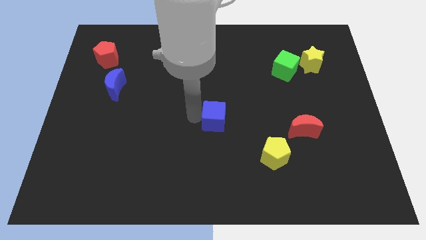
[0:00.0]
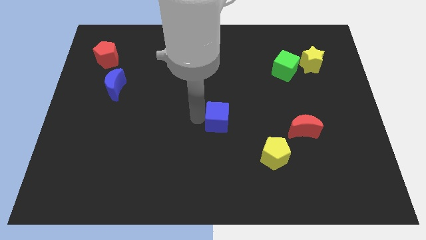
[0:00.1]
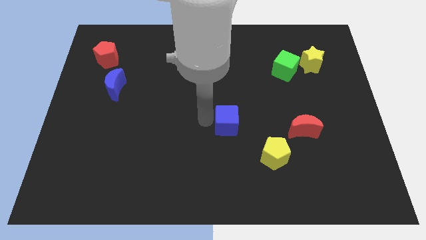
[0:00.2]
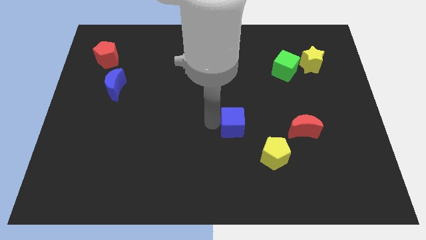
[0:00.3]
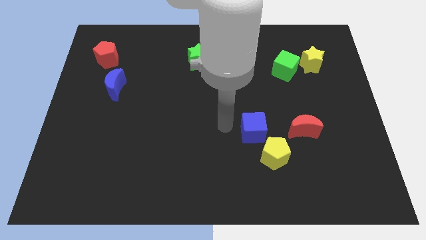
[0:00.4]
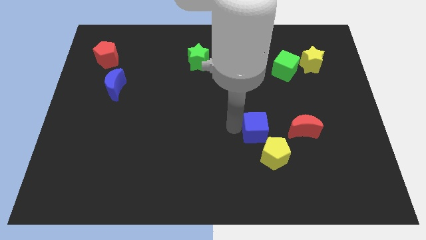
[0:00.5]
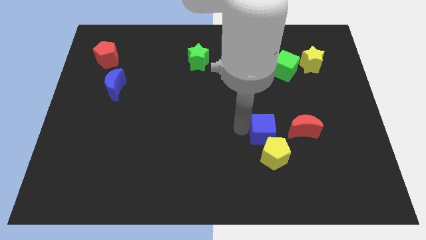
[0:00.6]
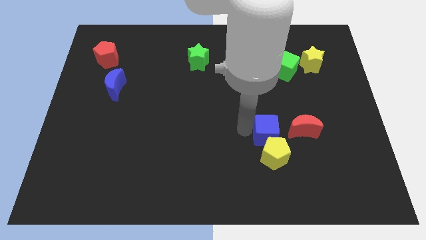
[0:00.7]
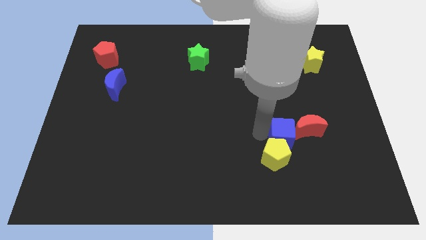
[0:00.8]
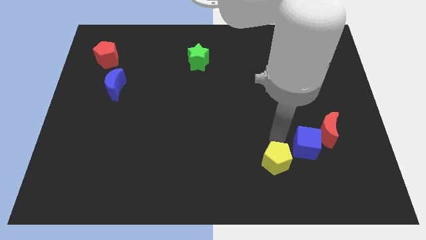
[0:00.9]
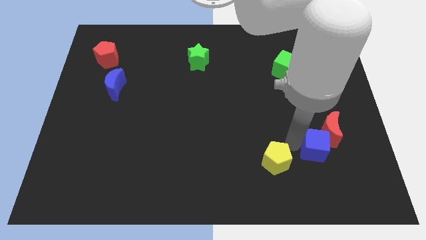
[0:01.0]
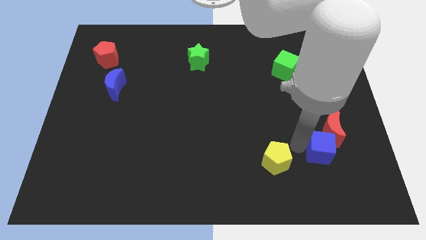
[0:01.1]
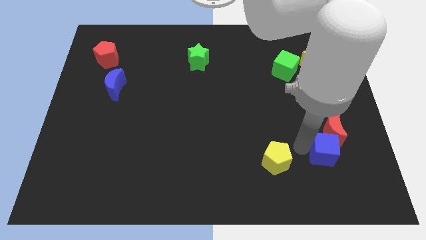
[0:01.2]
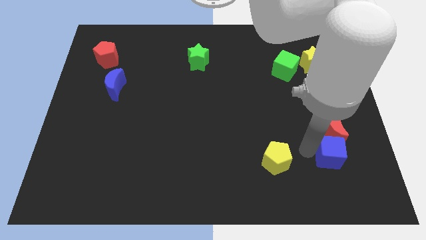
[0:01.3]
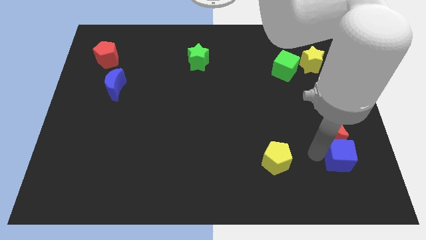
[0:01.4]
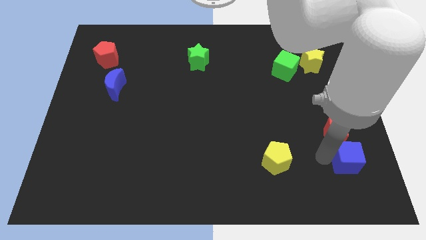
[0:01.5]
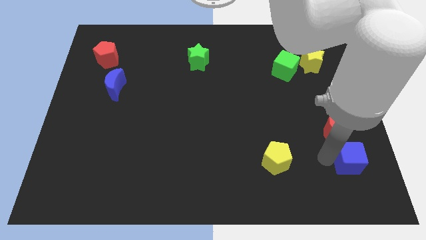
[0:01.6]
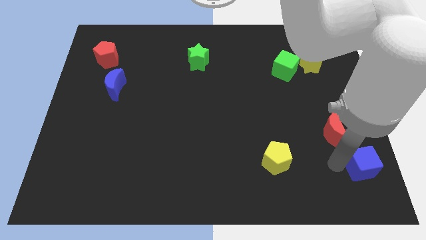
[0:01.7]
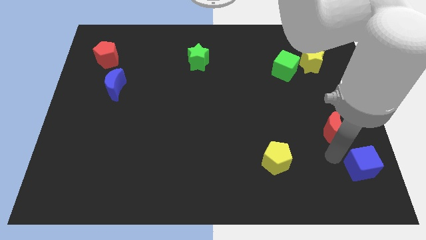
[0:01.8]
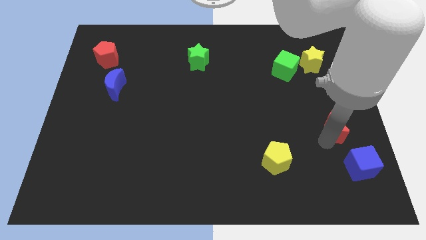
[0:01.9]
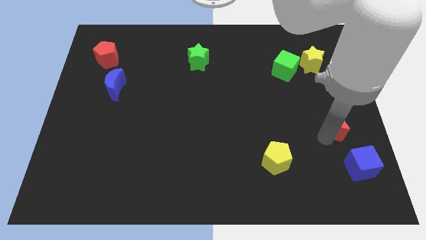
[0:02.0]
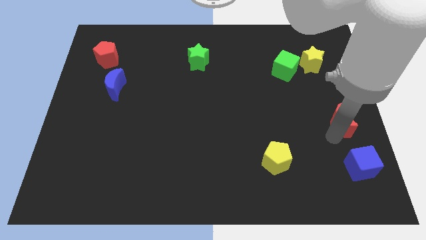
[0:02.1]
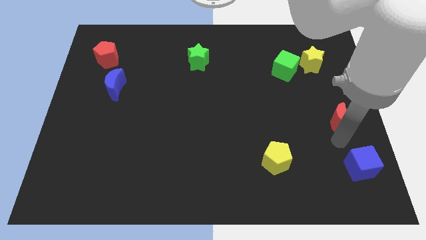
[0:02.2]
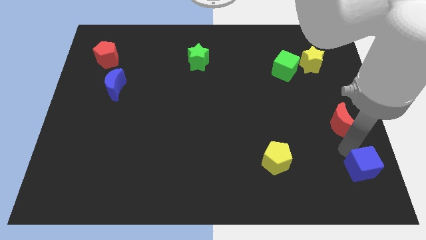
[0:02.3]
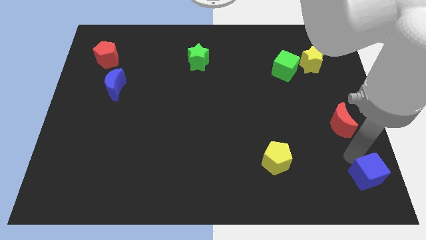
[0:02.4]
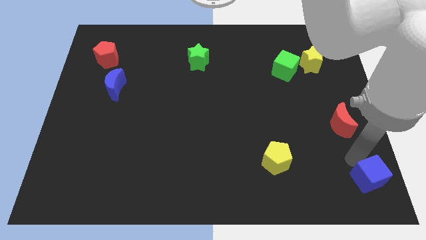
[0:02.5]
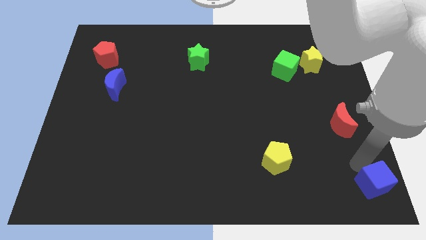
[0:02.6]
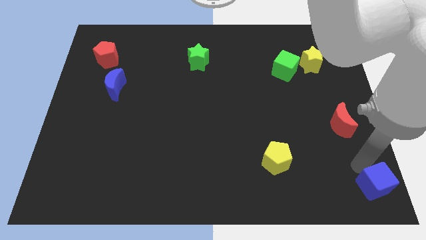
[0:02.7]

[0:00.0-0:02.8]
place blue cube towards bottom right corner

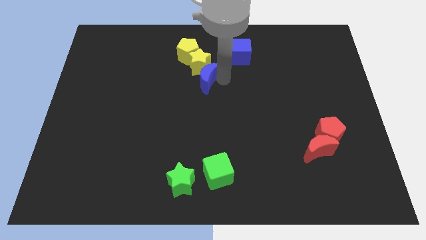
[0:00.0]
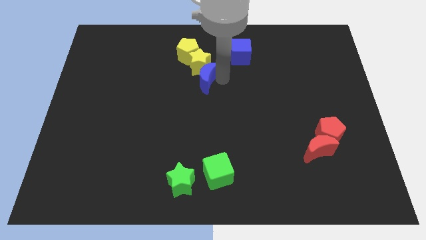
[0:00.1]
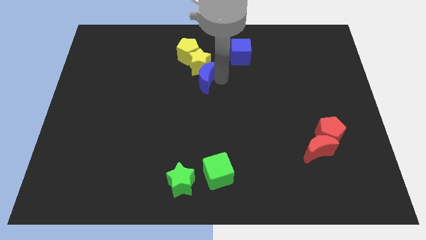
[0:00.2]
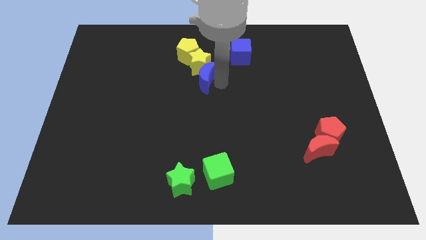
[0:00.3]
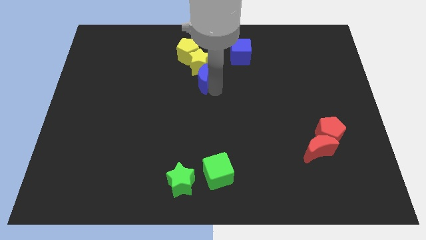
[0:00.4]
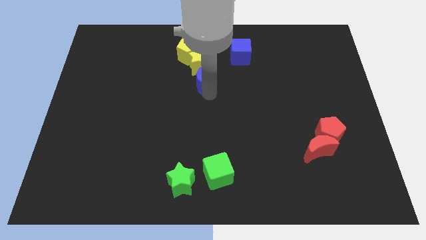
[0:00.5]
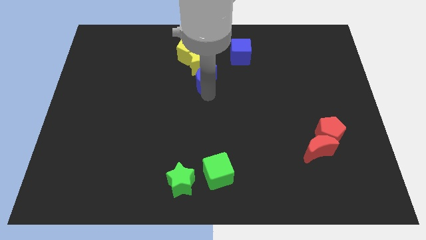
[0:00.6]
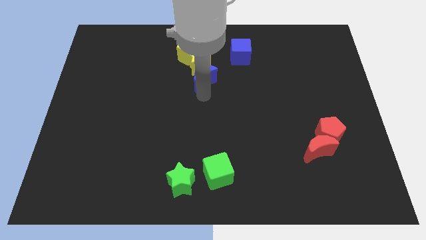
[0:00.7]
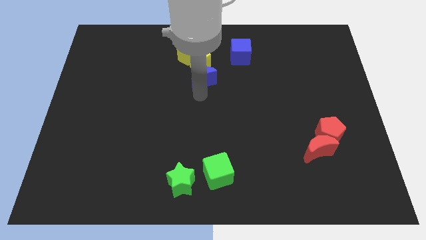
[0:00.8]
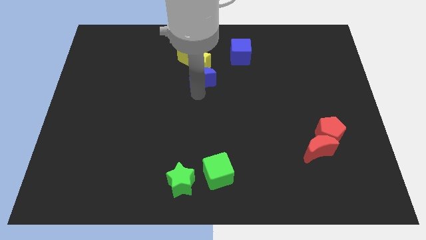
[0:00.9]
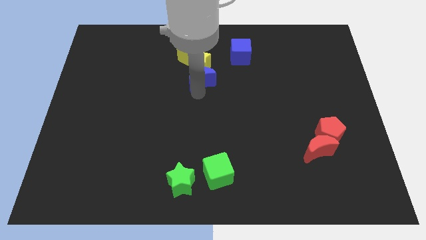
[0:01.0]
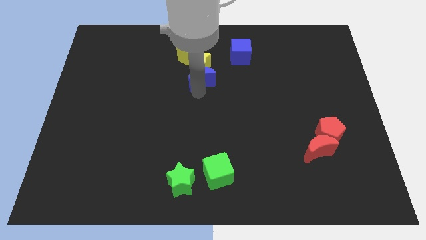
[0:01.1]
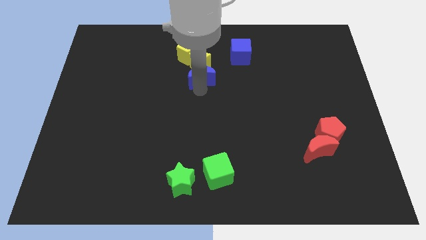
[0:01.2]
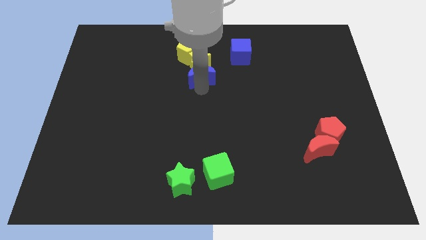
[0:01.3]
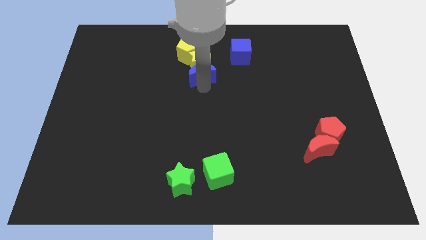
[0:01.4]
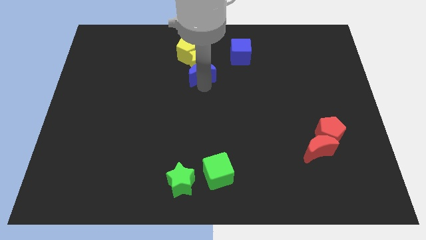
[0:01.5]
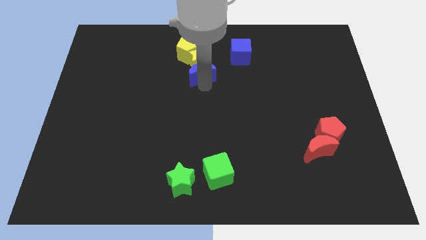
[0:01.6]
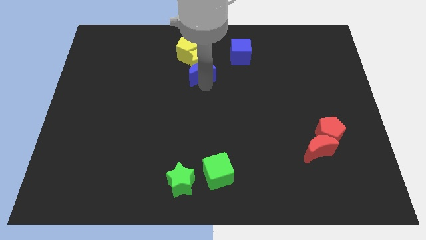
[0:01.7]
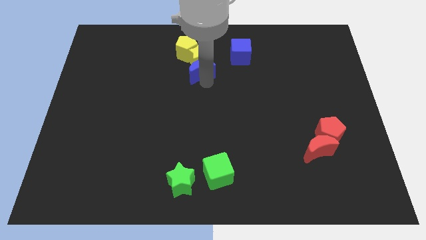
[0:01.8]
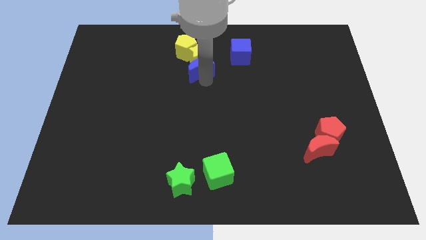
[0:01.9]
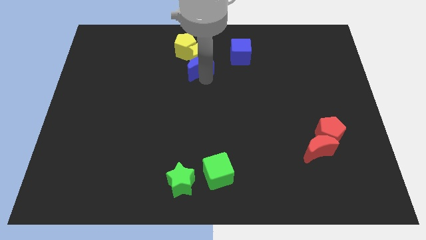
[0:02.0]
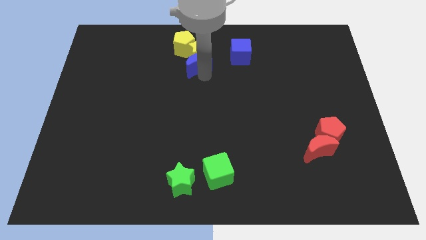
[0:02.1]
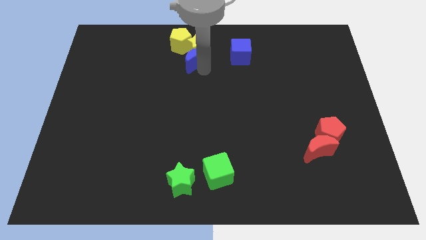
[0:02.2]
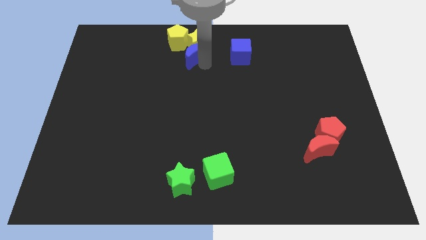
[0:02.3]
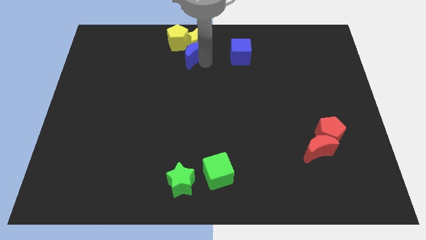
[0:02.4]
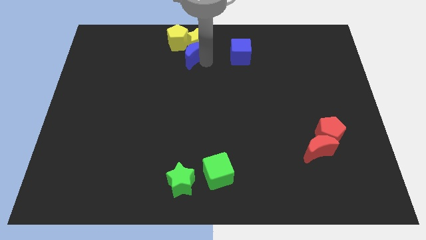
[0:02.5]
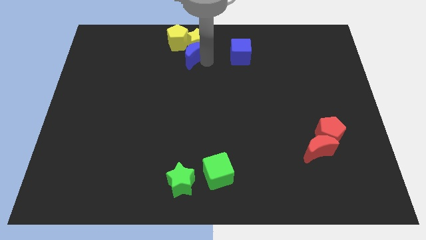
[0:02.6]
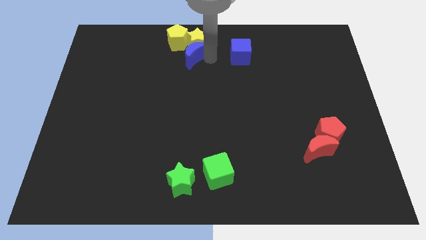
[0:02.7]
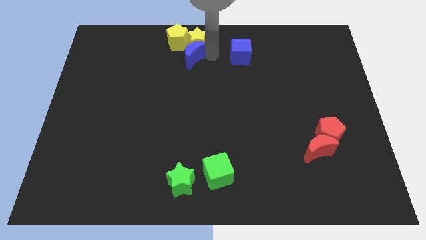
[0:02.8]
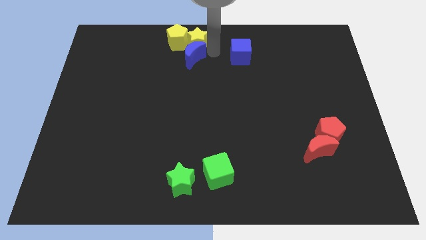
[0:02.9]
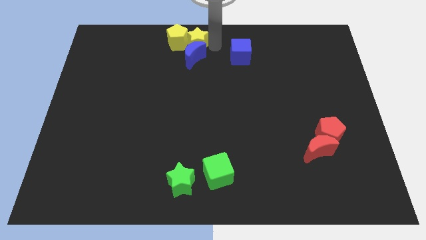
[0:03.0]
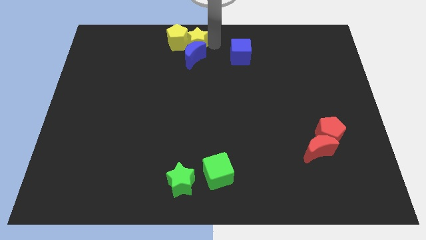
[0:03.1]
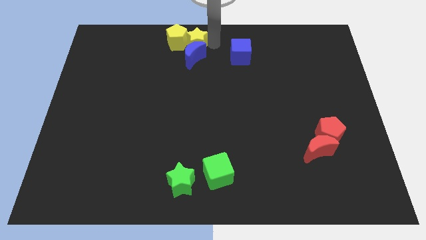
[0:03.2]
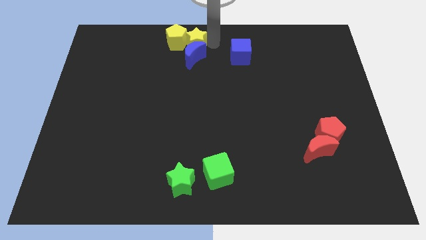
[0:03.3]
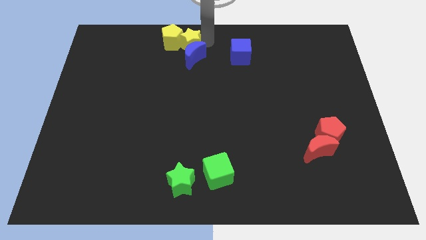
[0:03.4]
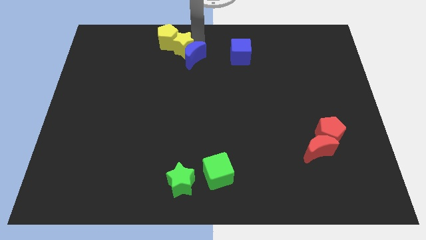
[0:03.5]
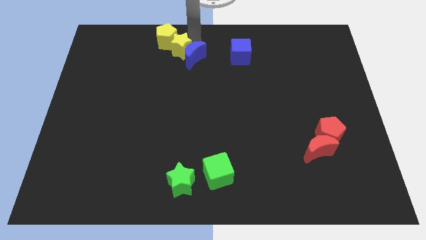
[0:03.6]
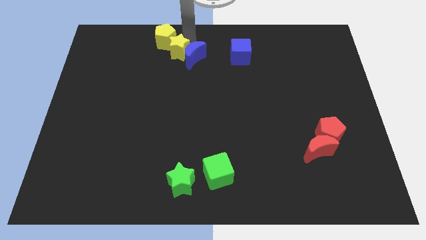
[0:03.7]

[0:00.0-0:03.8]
move yellow blocks and blue moon at center top

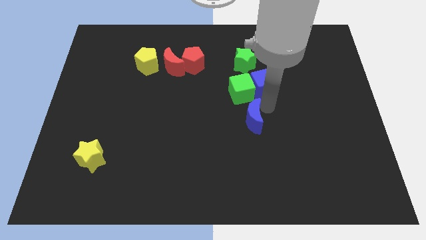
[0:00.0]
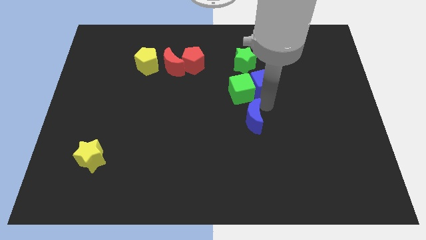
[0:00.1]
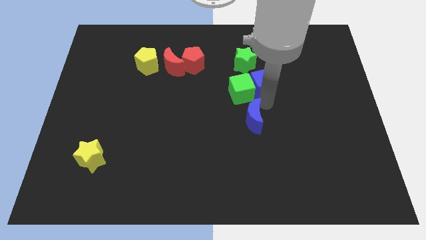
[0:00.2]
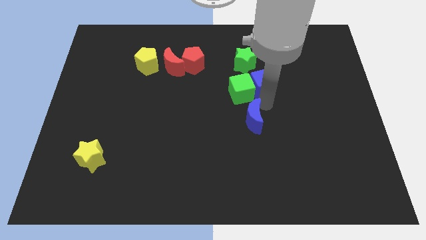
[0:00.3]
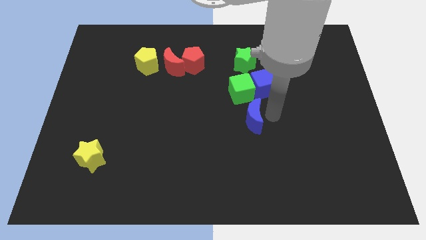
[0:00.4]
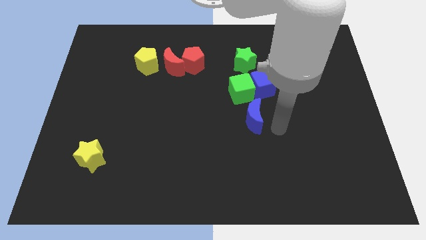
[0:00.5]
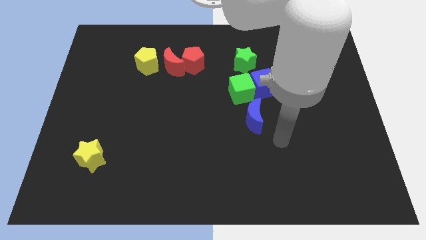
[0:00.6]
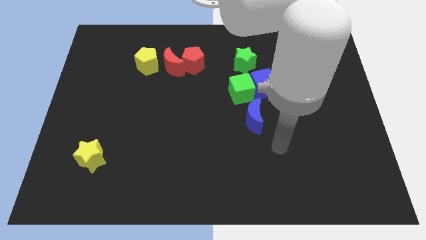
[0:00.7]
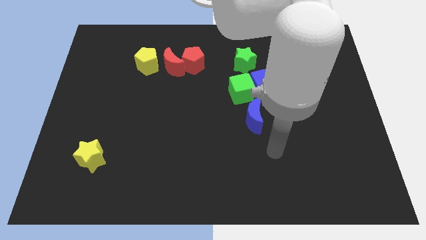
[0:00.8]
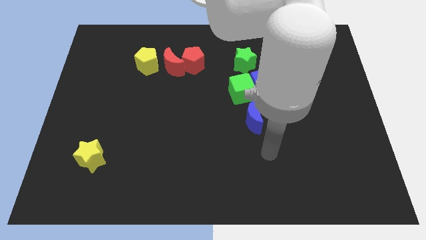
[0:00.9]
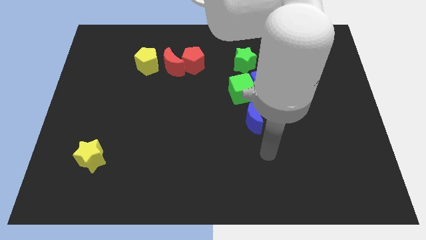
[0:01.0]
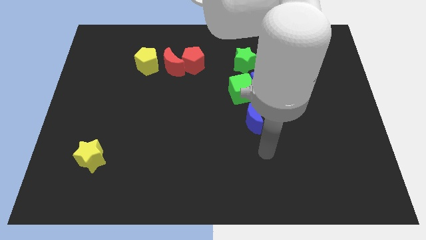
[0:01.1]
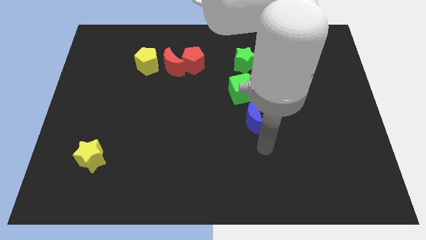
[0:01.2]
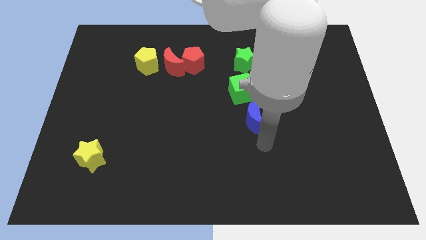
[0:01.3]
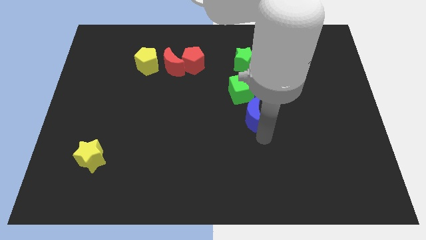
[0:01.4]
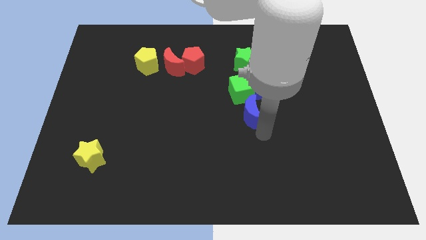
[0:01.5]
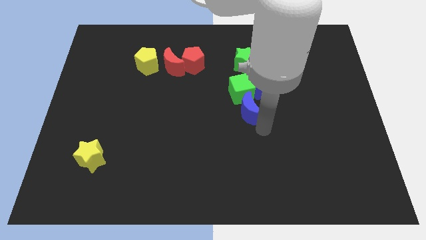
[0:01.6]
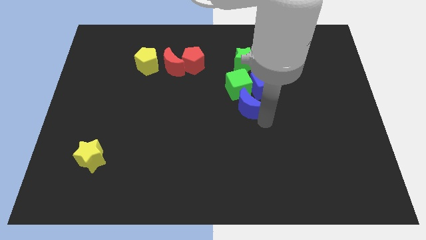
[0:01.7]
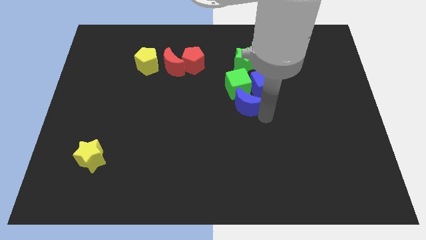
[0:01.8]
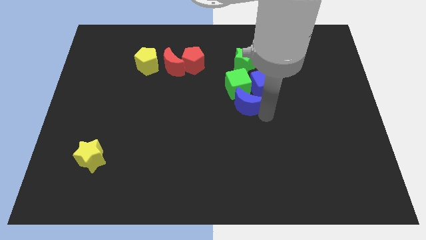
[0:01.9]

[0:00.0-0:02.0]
push the blue moon into the group of blocks

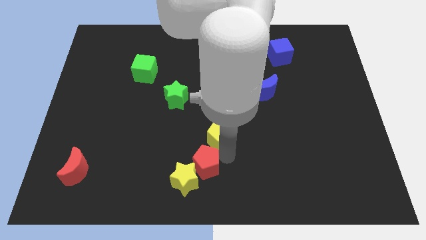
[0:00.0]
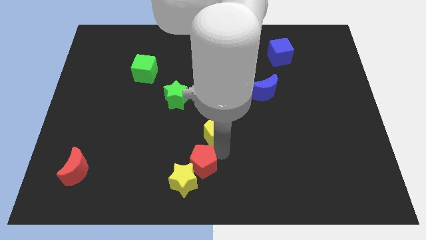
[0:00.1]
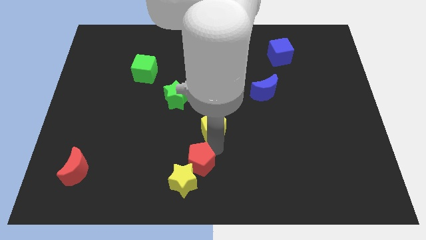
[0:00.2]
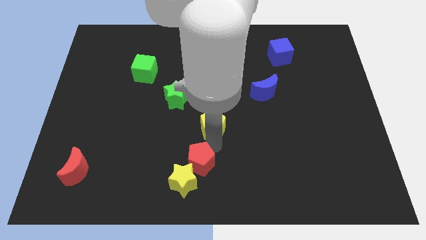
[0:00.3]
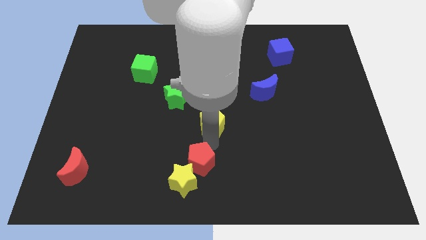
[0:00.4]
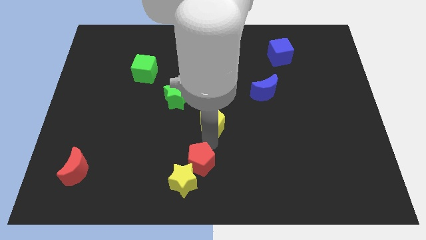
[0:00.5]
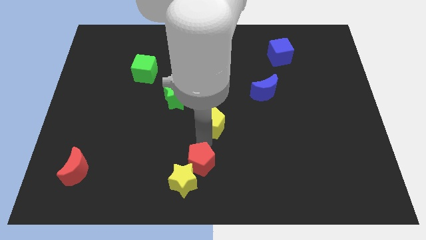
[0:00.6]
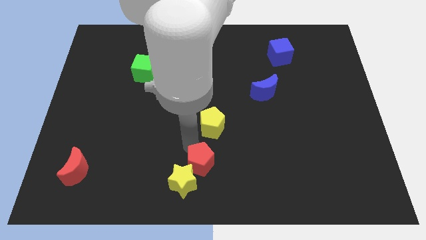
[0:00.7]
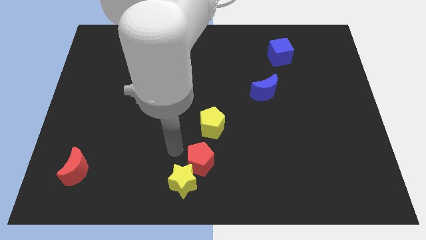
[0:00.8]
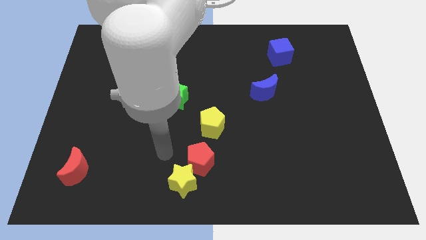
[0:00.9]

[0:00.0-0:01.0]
separate yellow pentagon from the red pentagon
